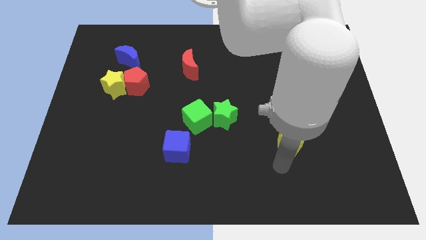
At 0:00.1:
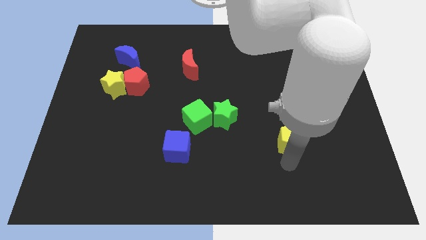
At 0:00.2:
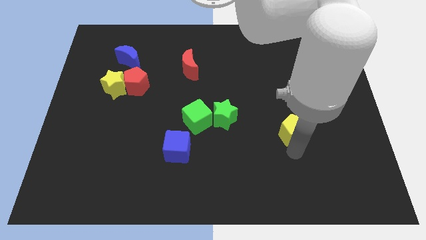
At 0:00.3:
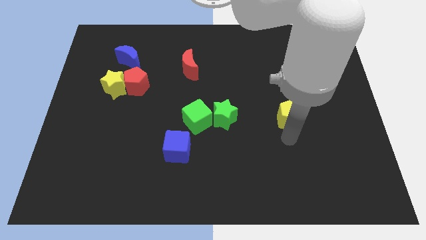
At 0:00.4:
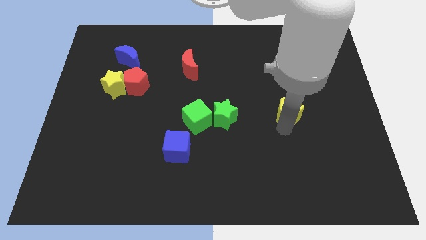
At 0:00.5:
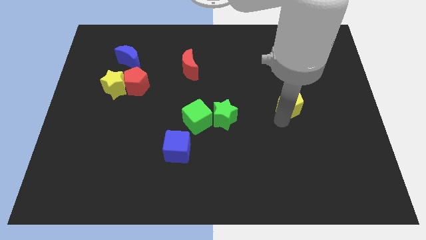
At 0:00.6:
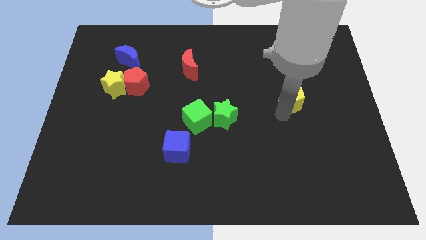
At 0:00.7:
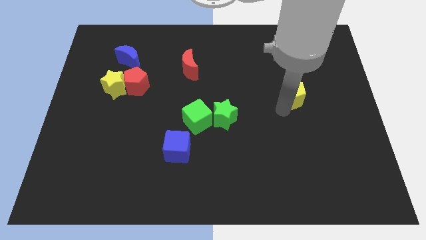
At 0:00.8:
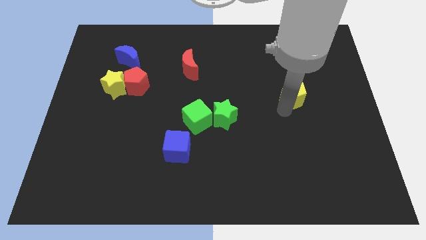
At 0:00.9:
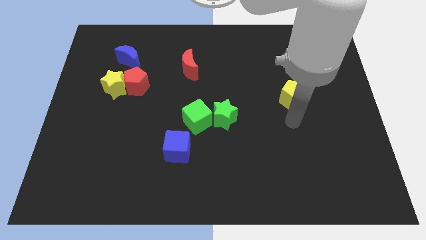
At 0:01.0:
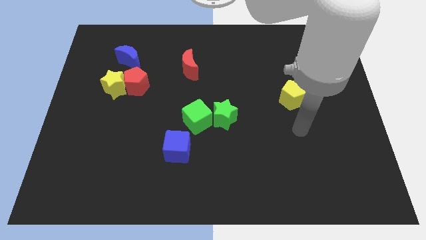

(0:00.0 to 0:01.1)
slide yellow pentagon slightly upwards

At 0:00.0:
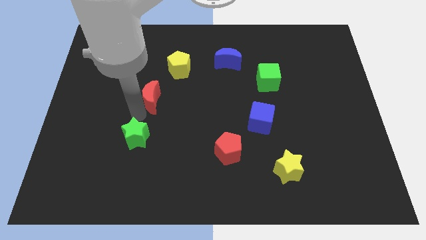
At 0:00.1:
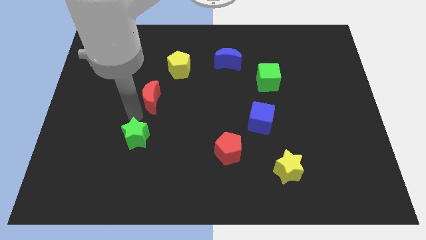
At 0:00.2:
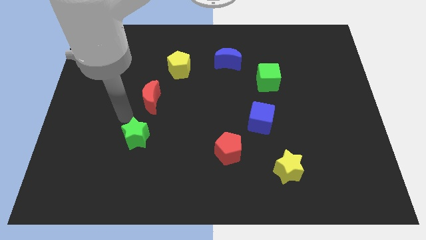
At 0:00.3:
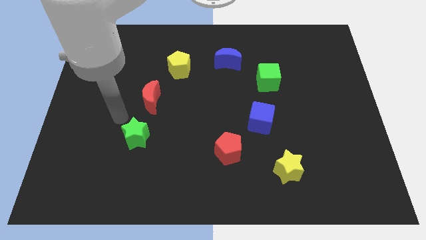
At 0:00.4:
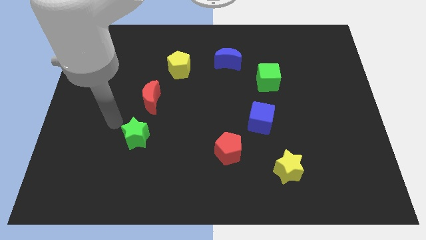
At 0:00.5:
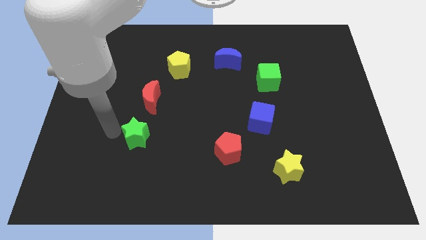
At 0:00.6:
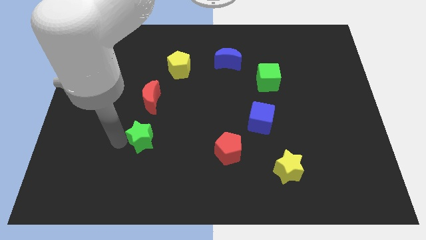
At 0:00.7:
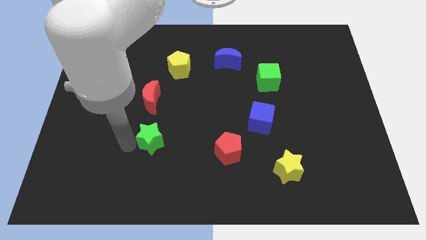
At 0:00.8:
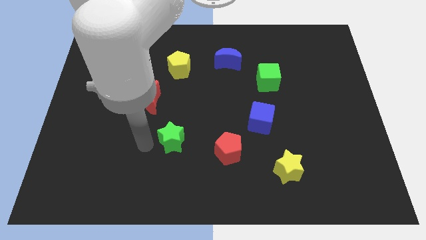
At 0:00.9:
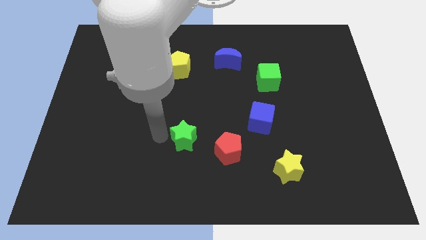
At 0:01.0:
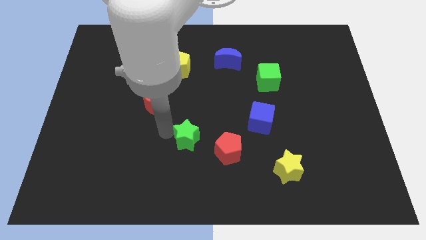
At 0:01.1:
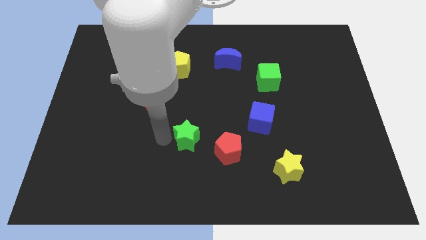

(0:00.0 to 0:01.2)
push the green star in between the red pentagon and red moon diagonally

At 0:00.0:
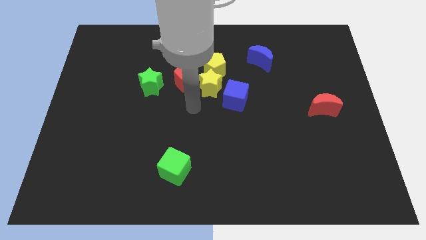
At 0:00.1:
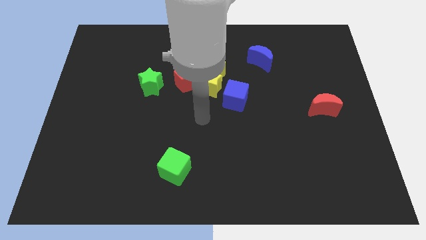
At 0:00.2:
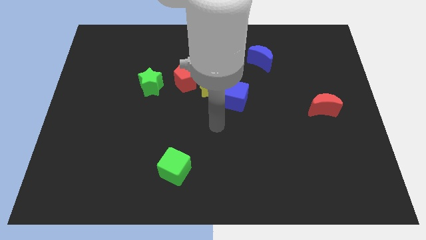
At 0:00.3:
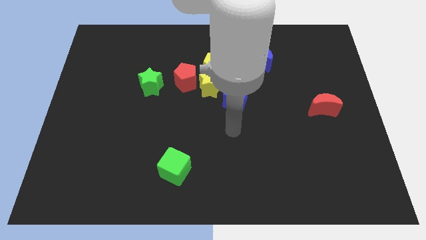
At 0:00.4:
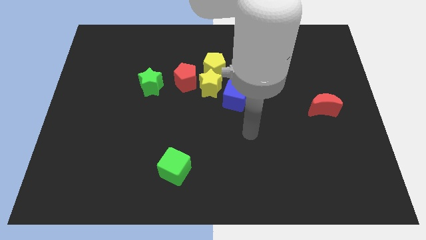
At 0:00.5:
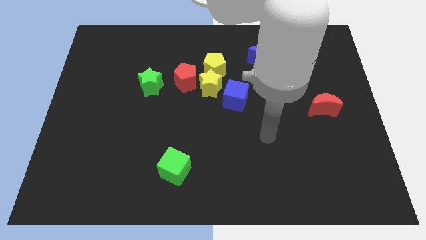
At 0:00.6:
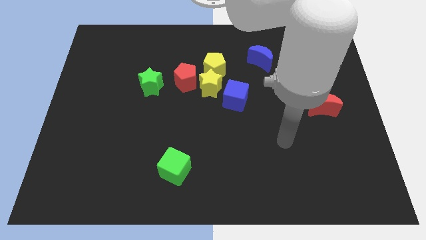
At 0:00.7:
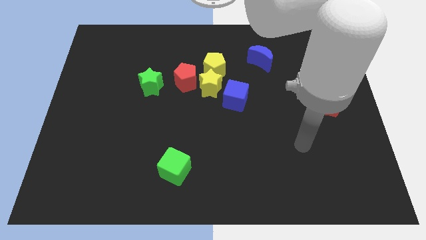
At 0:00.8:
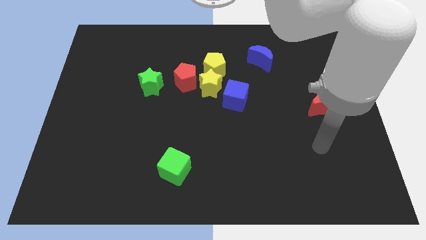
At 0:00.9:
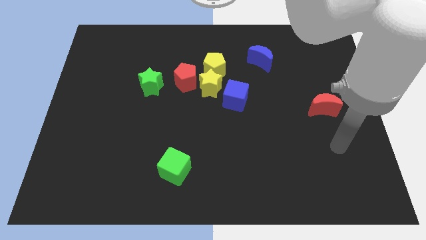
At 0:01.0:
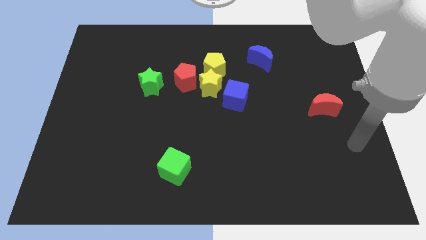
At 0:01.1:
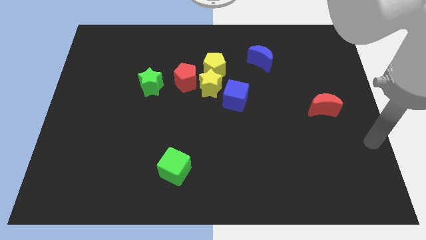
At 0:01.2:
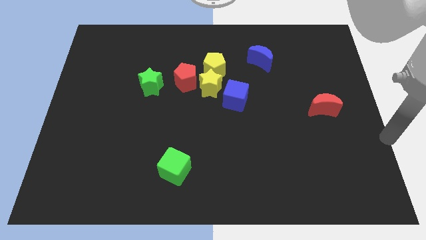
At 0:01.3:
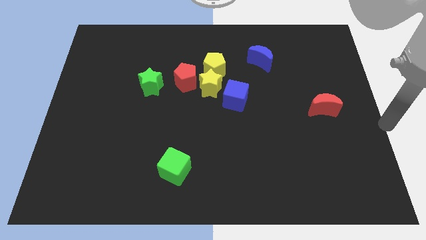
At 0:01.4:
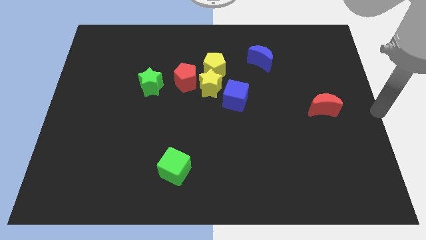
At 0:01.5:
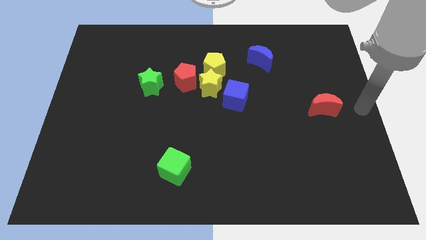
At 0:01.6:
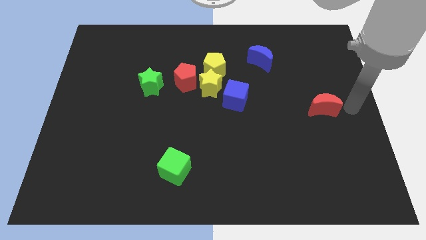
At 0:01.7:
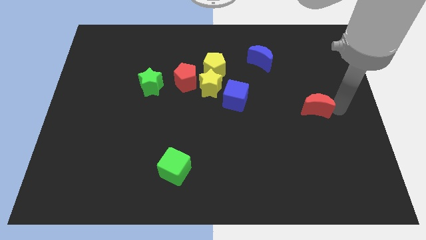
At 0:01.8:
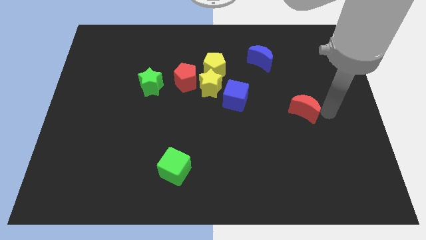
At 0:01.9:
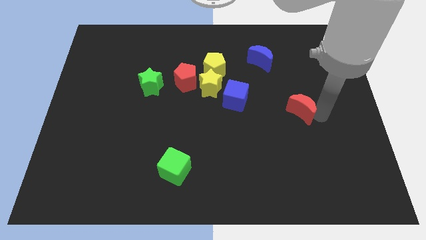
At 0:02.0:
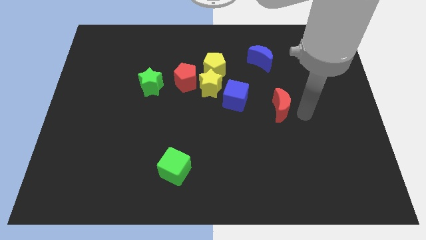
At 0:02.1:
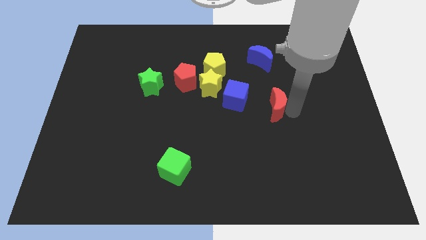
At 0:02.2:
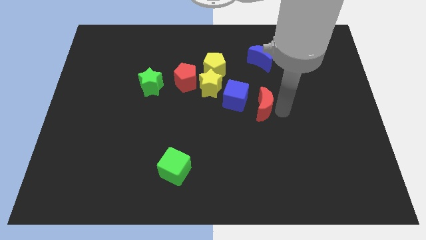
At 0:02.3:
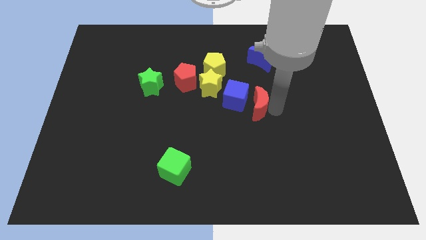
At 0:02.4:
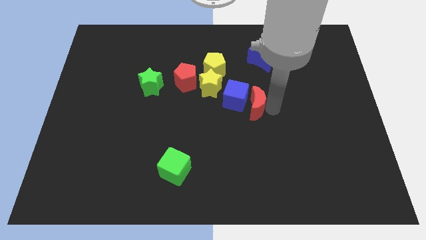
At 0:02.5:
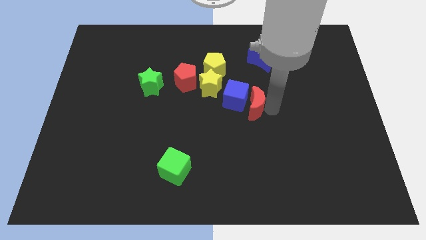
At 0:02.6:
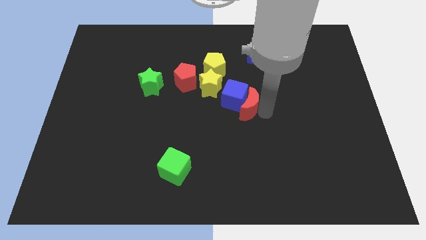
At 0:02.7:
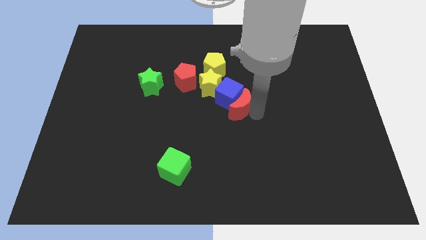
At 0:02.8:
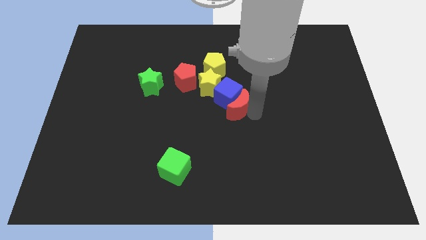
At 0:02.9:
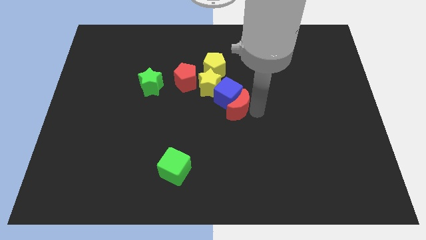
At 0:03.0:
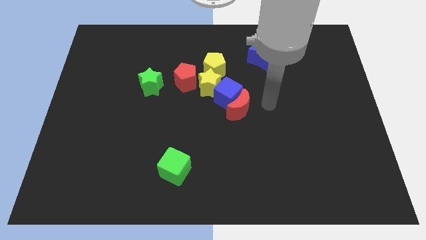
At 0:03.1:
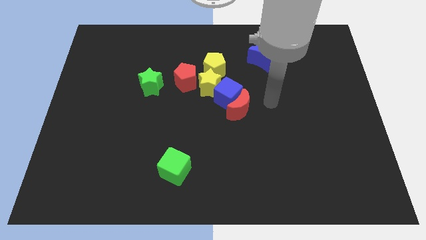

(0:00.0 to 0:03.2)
move the red moon to the bottom right side of the blue cube

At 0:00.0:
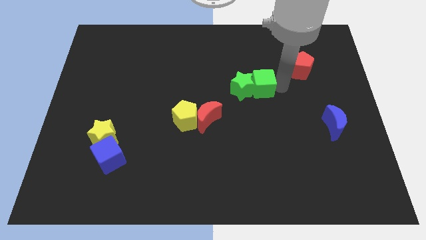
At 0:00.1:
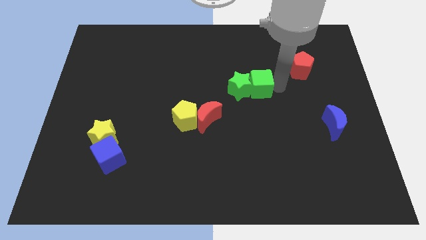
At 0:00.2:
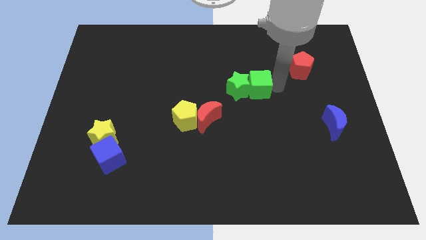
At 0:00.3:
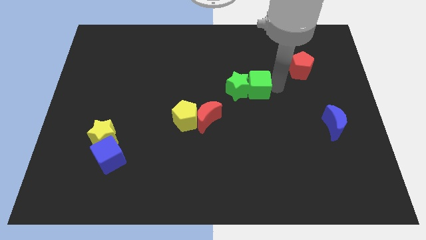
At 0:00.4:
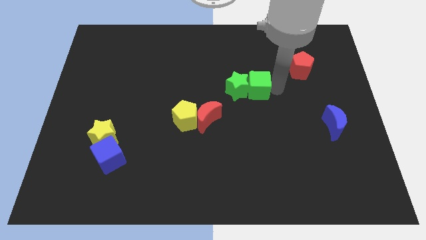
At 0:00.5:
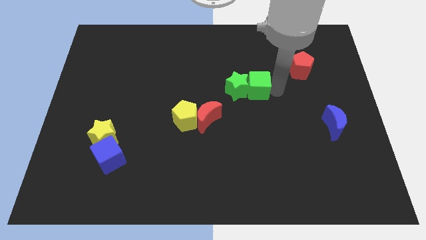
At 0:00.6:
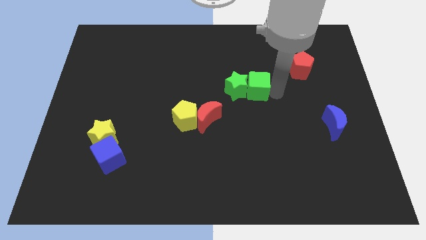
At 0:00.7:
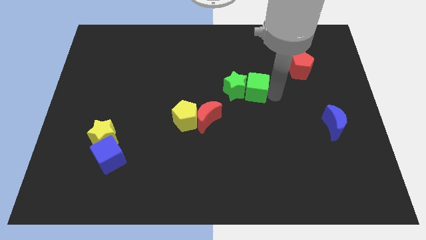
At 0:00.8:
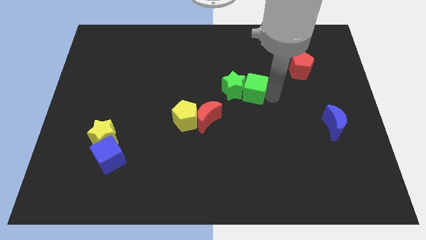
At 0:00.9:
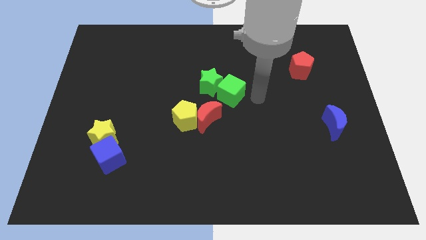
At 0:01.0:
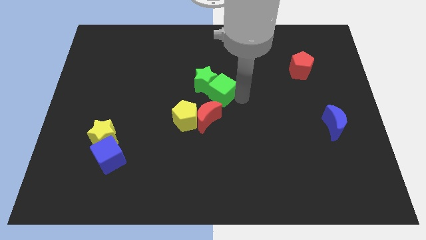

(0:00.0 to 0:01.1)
move the green star and green cube towards the center of the board

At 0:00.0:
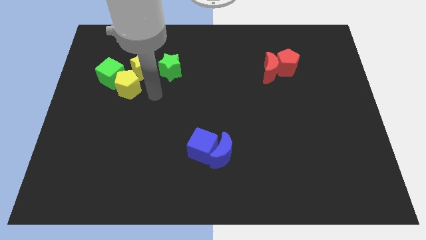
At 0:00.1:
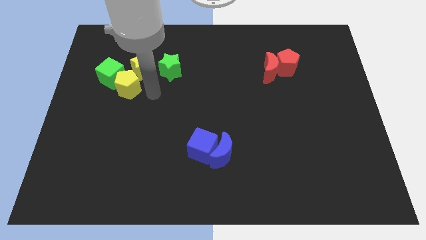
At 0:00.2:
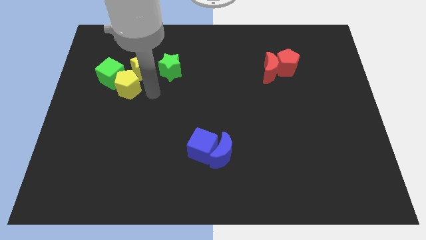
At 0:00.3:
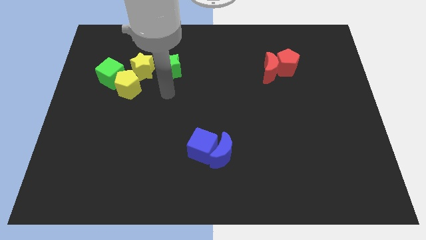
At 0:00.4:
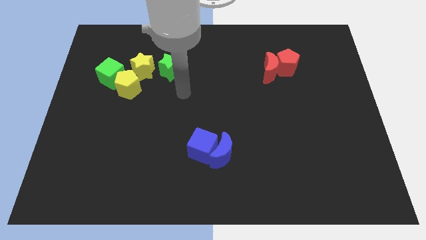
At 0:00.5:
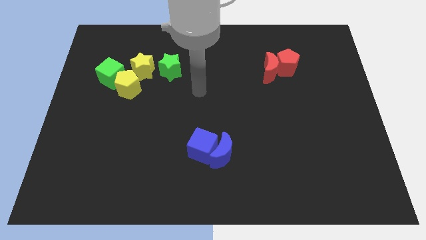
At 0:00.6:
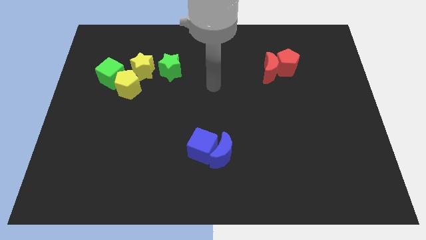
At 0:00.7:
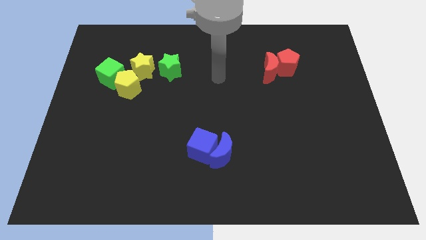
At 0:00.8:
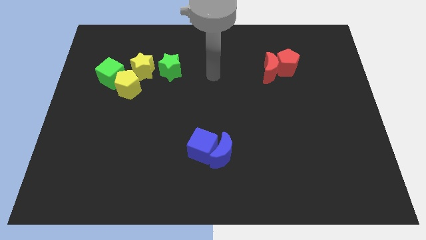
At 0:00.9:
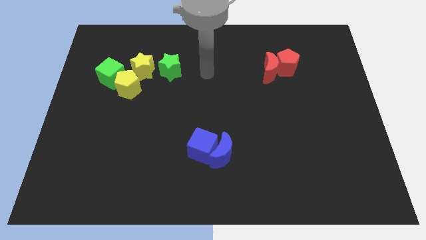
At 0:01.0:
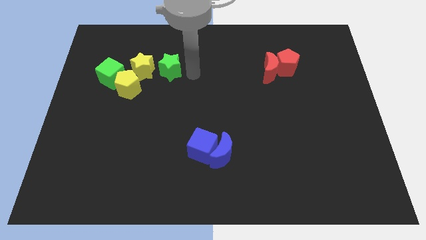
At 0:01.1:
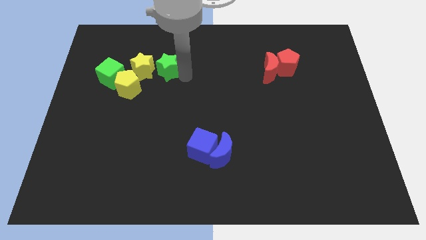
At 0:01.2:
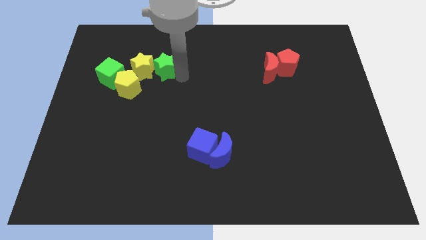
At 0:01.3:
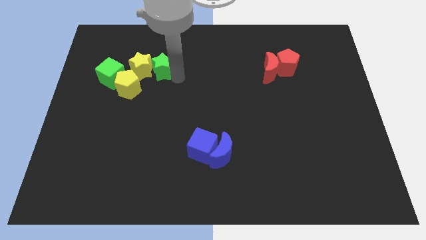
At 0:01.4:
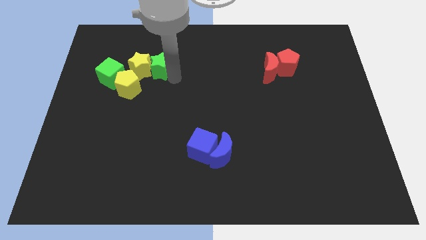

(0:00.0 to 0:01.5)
drag the green star into the yellow star

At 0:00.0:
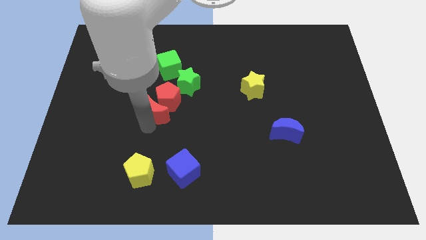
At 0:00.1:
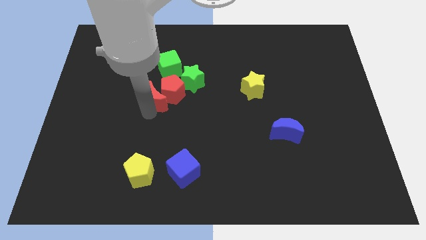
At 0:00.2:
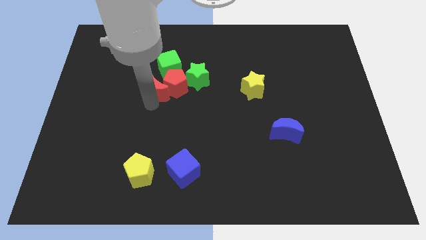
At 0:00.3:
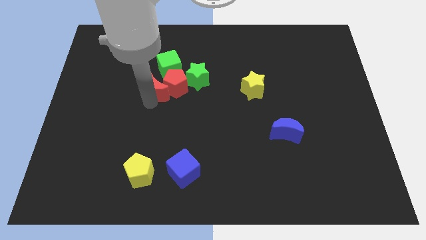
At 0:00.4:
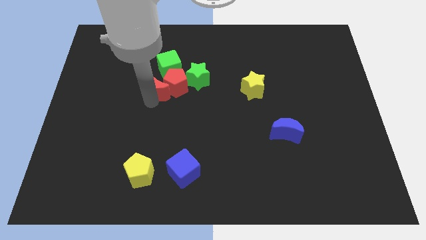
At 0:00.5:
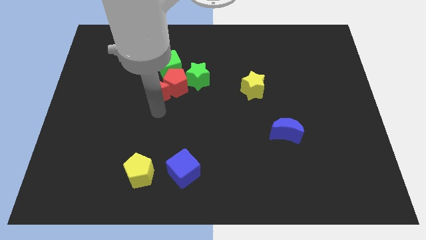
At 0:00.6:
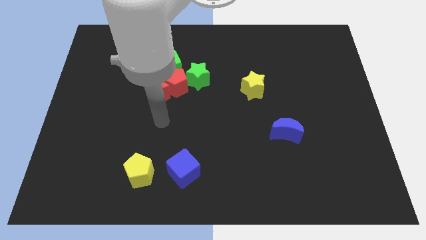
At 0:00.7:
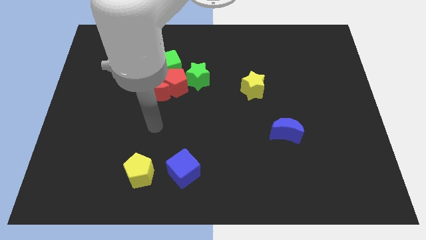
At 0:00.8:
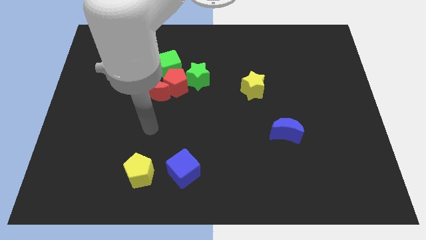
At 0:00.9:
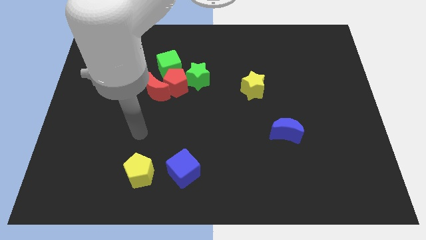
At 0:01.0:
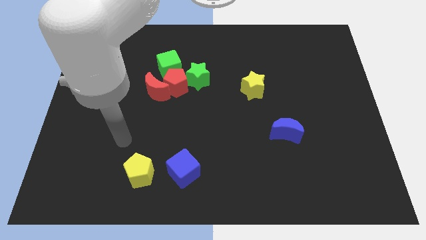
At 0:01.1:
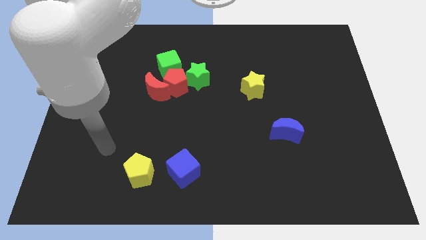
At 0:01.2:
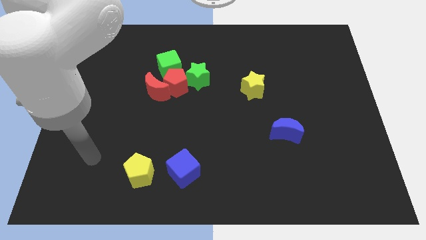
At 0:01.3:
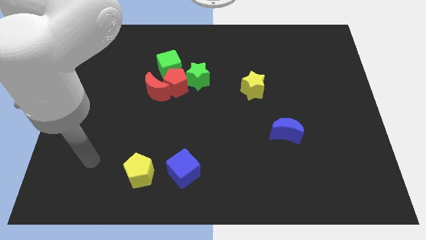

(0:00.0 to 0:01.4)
move your arm away from red moon
